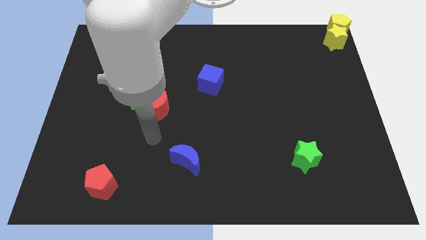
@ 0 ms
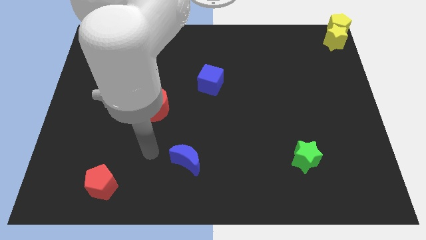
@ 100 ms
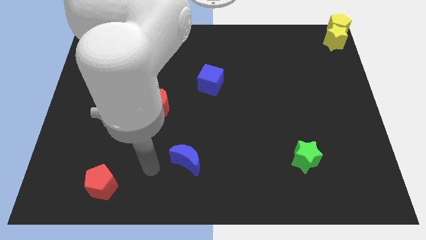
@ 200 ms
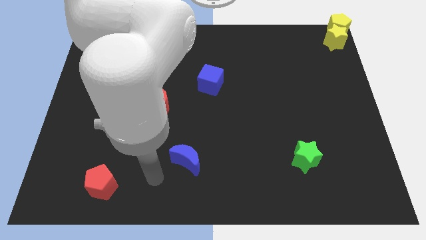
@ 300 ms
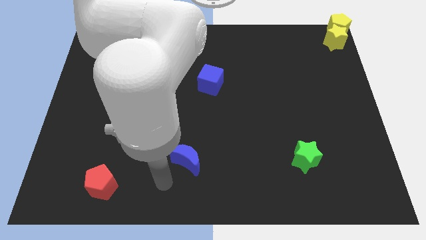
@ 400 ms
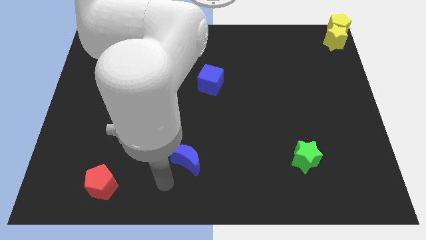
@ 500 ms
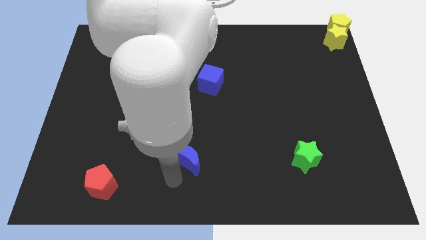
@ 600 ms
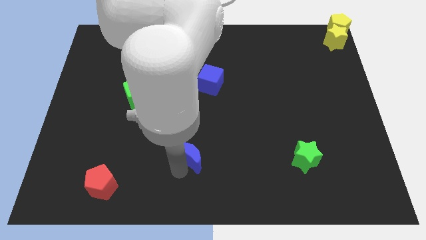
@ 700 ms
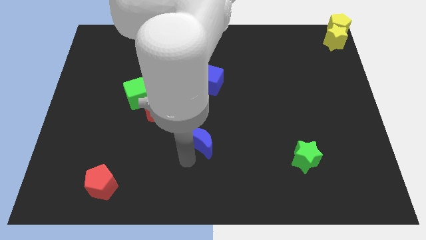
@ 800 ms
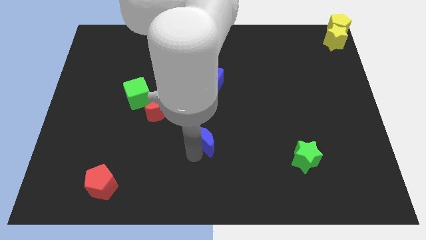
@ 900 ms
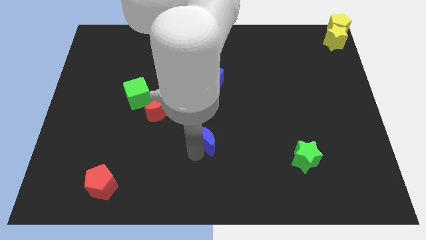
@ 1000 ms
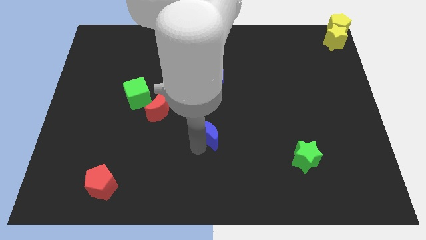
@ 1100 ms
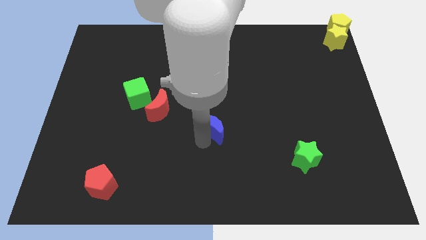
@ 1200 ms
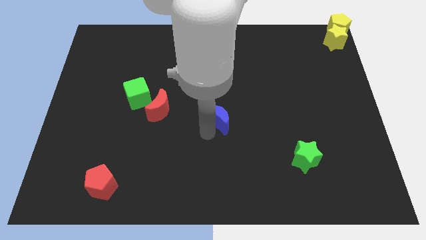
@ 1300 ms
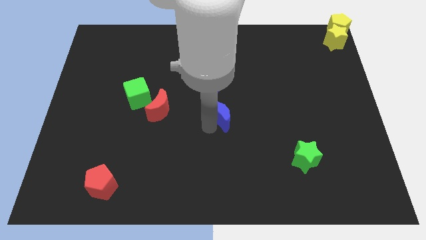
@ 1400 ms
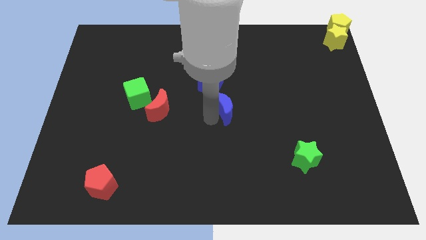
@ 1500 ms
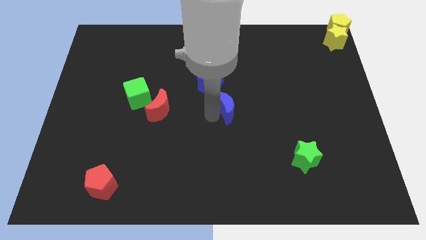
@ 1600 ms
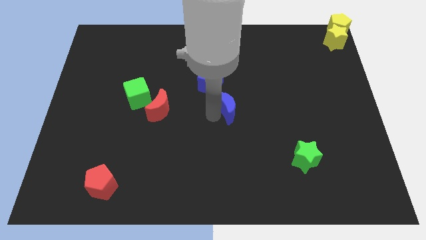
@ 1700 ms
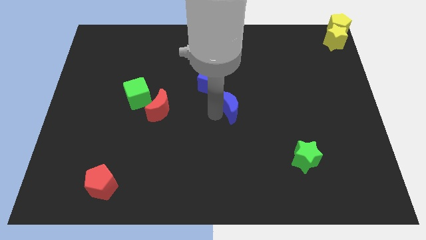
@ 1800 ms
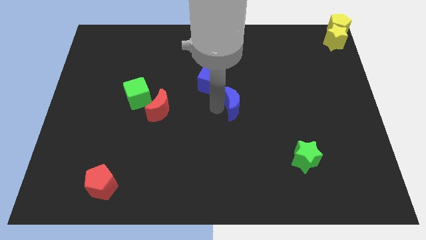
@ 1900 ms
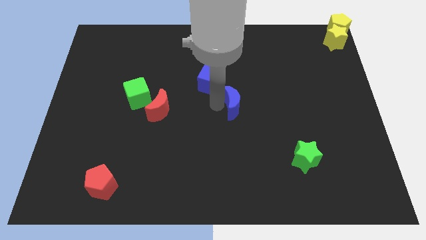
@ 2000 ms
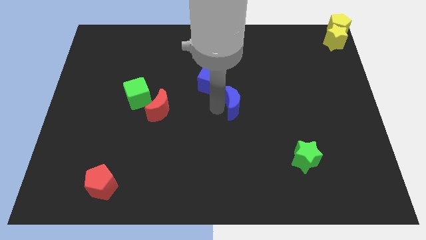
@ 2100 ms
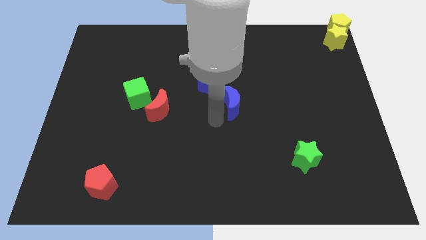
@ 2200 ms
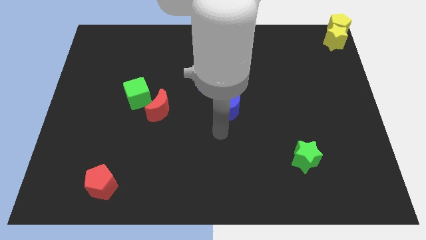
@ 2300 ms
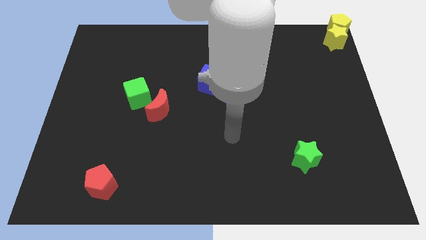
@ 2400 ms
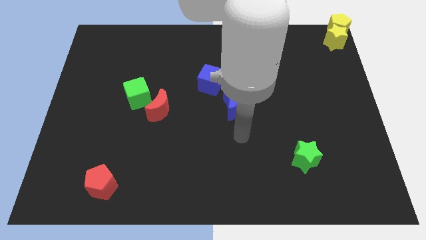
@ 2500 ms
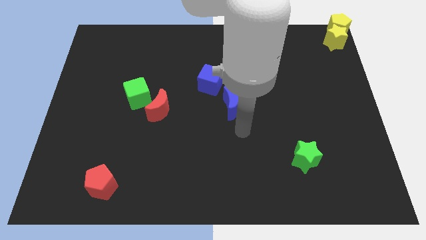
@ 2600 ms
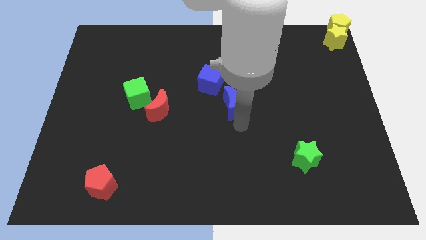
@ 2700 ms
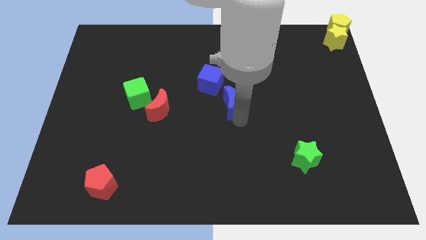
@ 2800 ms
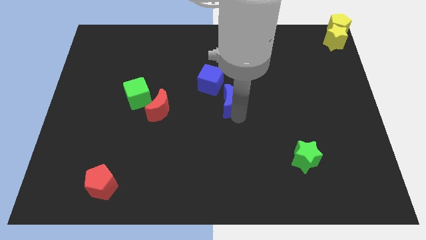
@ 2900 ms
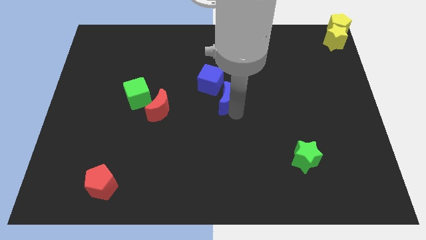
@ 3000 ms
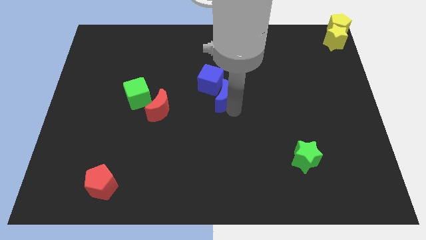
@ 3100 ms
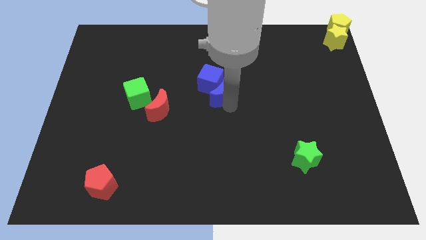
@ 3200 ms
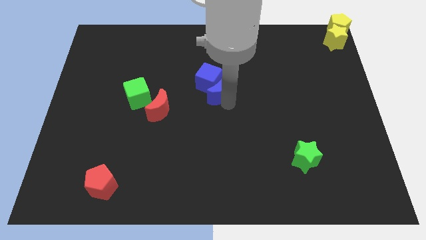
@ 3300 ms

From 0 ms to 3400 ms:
move the blue moon into the blue cube

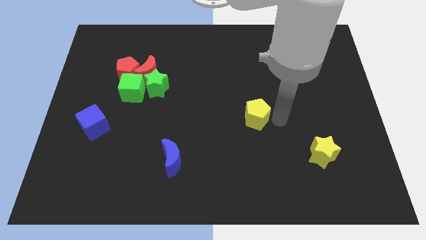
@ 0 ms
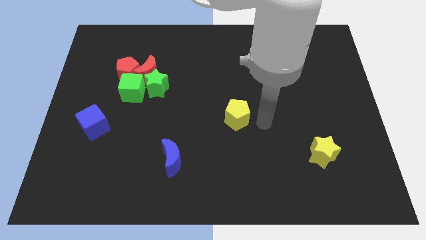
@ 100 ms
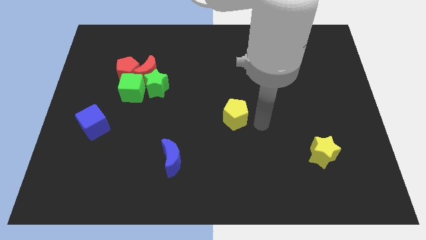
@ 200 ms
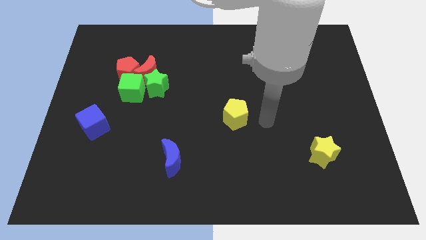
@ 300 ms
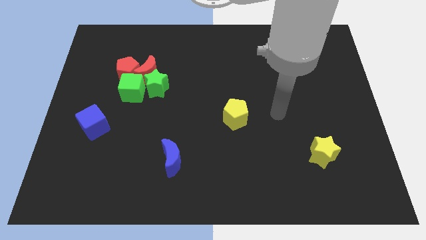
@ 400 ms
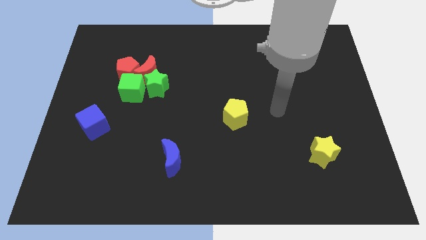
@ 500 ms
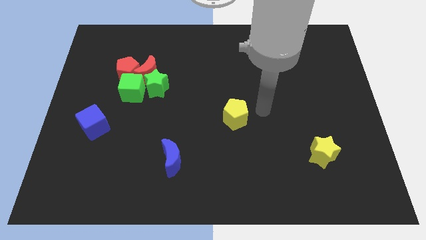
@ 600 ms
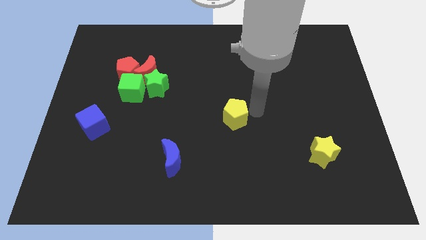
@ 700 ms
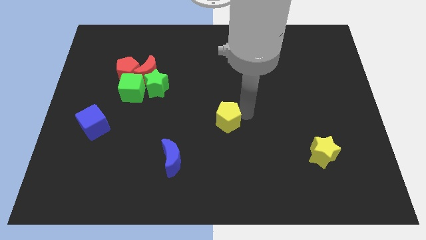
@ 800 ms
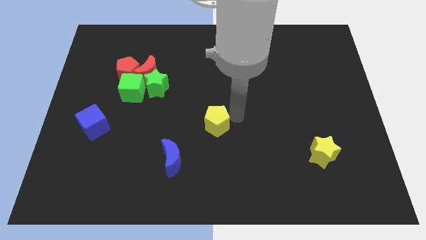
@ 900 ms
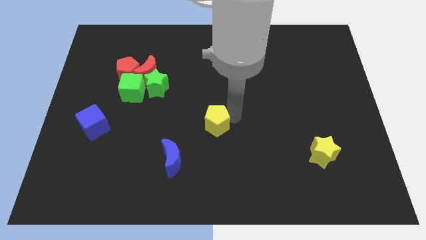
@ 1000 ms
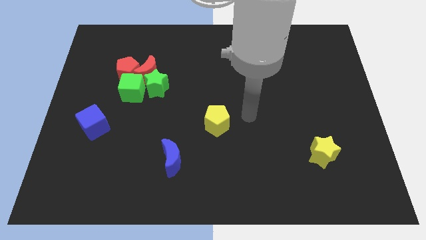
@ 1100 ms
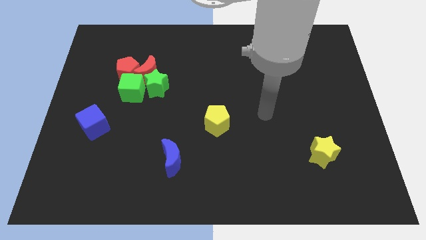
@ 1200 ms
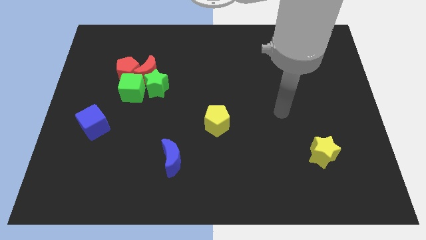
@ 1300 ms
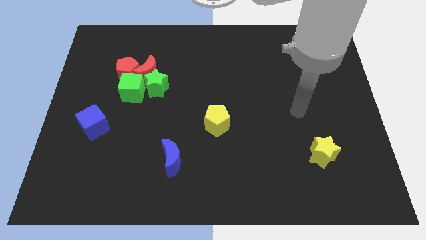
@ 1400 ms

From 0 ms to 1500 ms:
move the yellow pentagon towards the blue moon

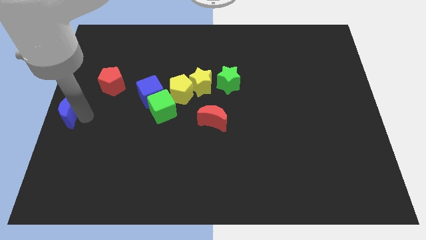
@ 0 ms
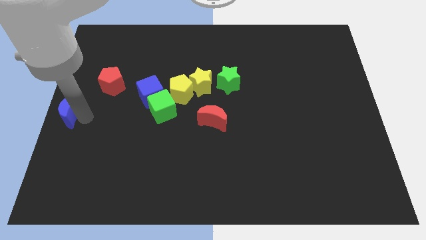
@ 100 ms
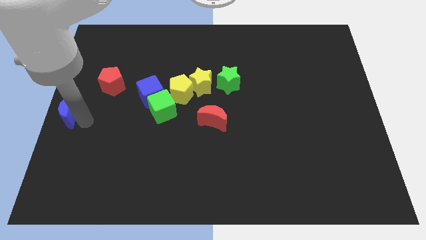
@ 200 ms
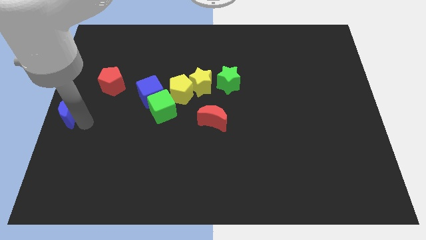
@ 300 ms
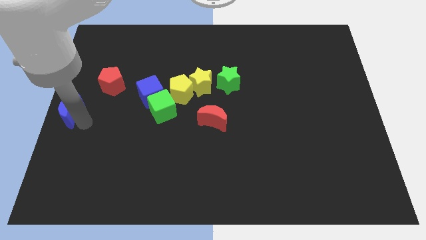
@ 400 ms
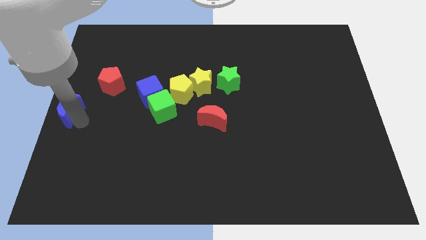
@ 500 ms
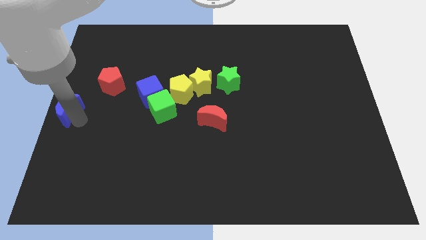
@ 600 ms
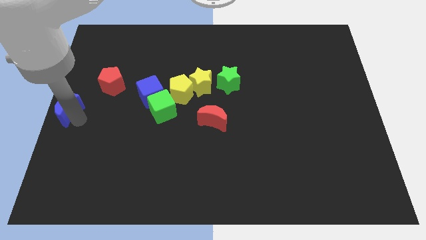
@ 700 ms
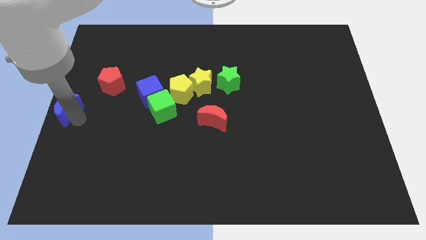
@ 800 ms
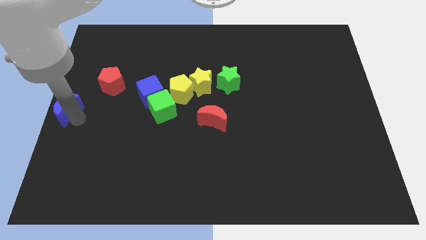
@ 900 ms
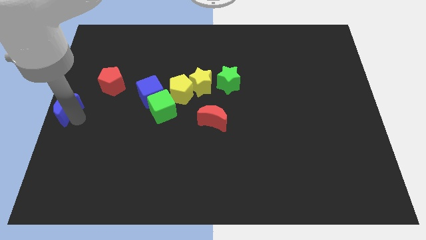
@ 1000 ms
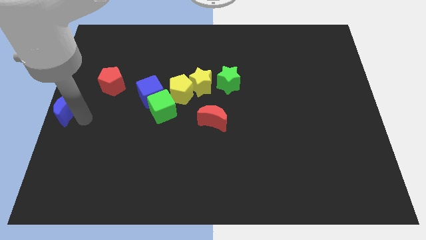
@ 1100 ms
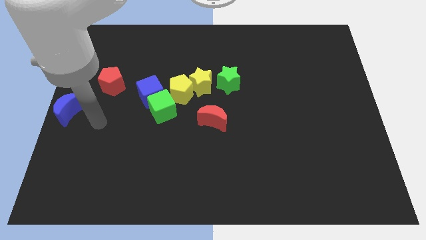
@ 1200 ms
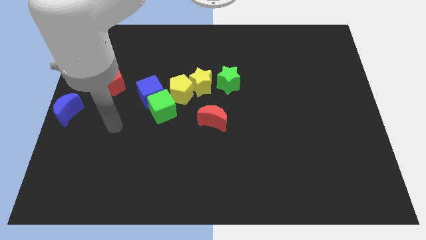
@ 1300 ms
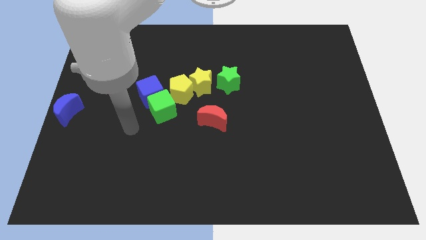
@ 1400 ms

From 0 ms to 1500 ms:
place red half moon at the left center of the board

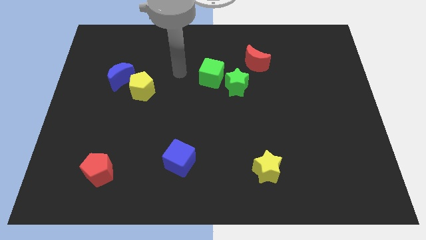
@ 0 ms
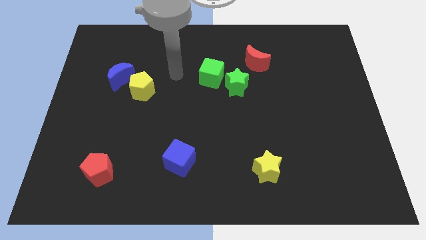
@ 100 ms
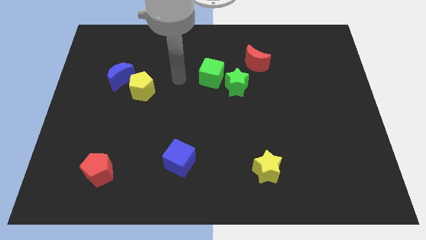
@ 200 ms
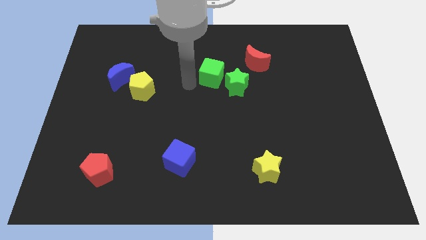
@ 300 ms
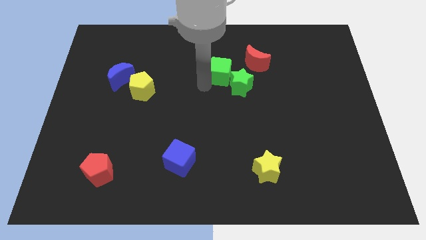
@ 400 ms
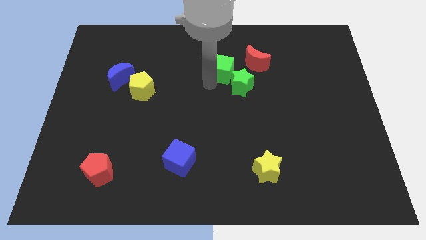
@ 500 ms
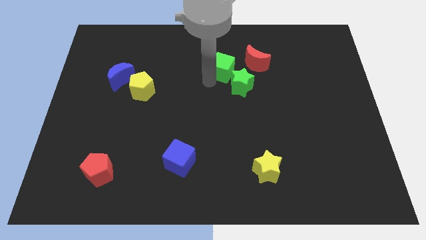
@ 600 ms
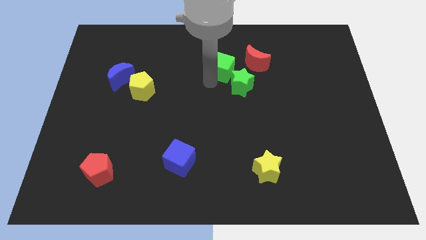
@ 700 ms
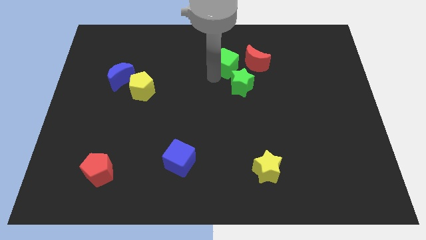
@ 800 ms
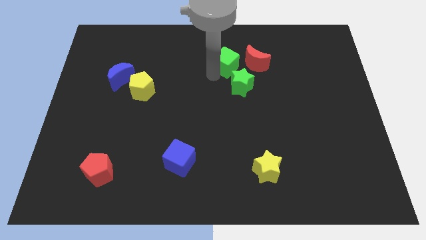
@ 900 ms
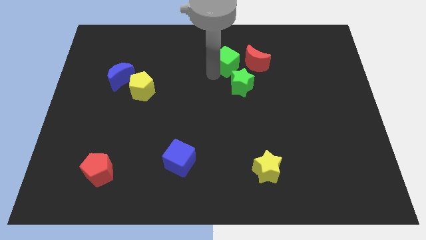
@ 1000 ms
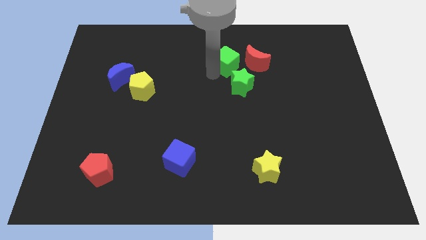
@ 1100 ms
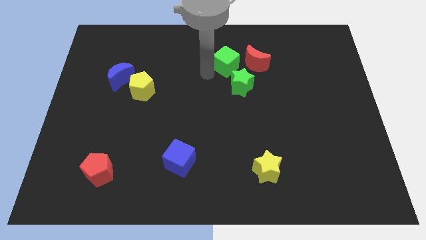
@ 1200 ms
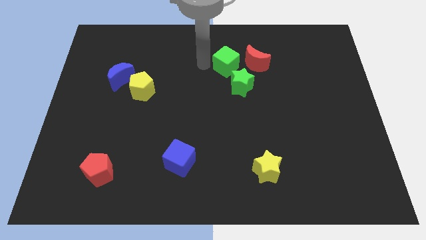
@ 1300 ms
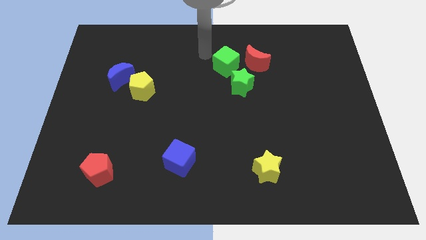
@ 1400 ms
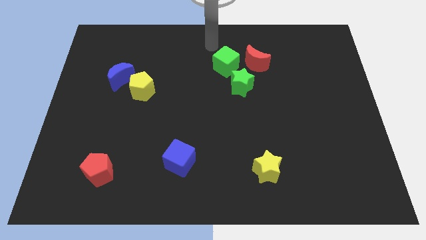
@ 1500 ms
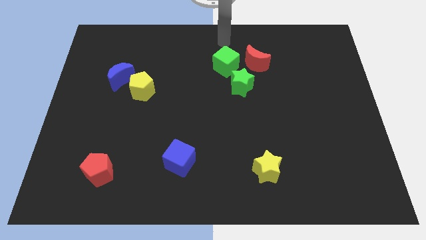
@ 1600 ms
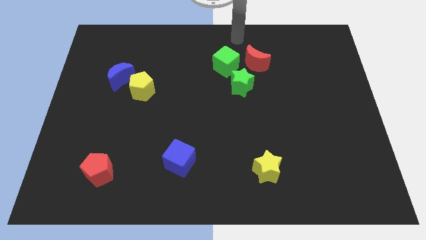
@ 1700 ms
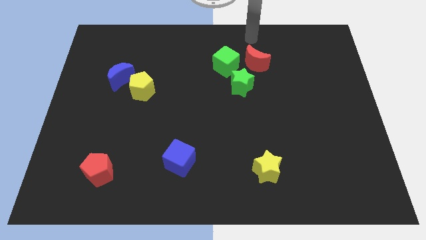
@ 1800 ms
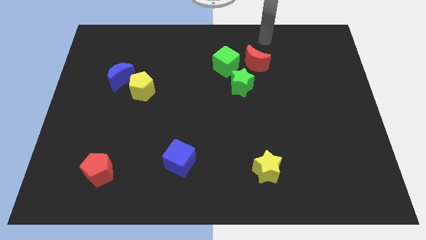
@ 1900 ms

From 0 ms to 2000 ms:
move the green cube diagonally to the top left of the green star

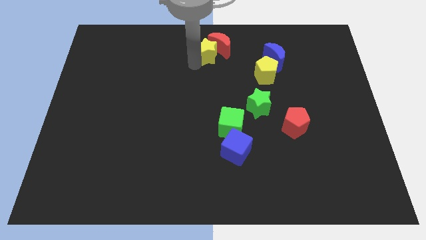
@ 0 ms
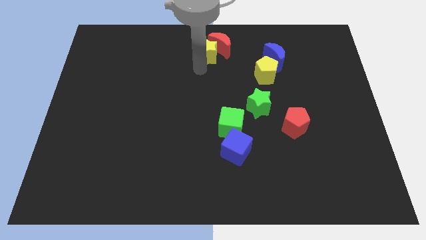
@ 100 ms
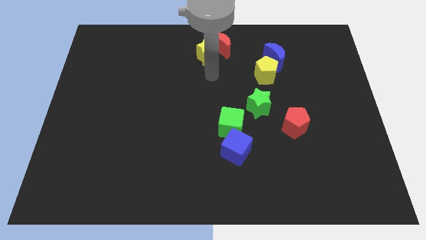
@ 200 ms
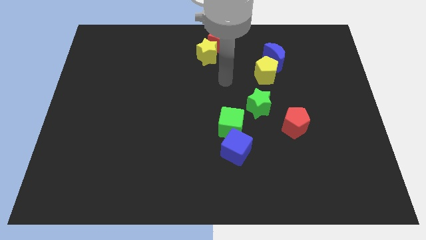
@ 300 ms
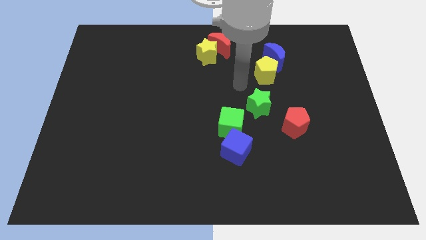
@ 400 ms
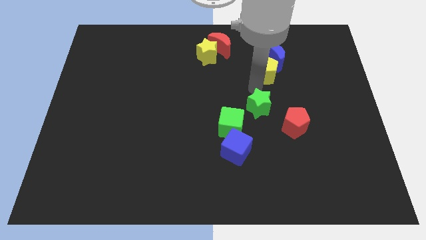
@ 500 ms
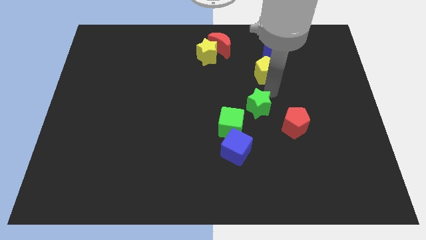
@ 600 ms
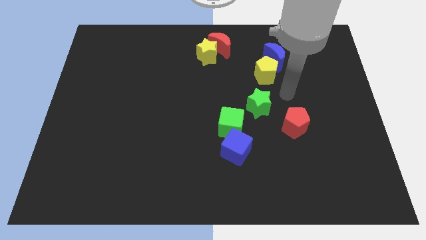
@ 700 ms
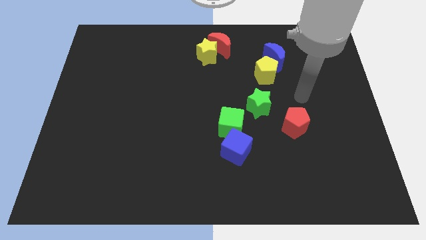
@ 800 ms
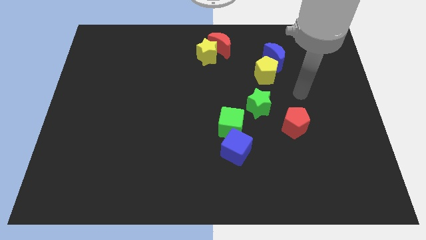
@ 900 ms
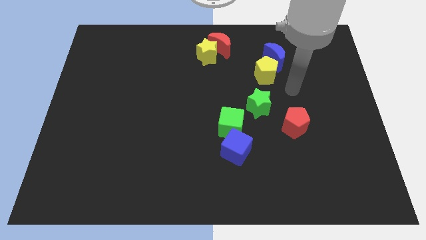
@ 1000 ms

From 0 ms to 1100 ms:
point your arm above the red pentagon
